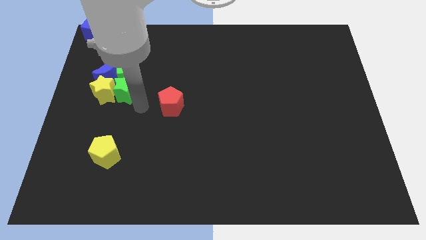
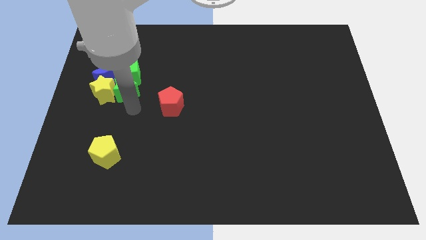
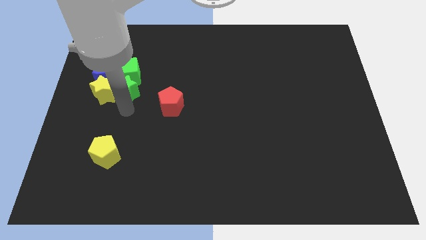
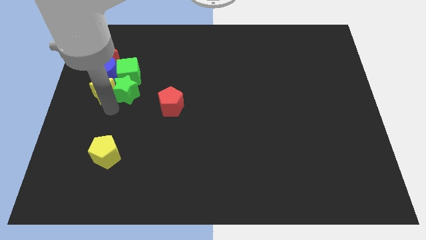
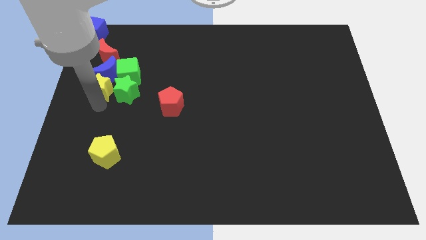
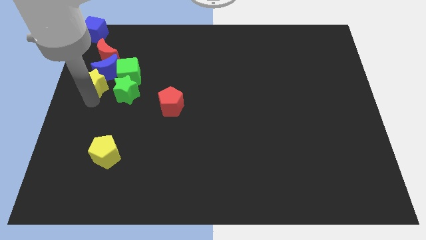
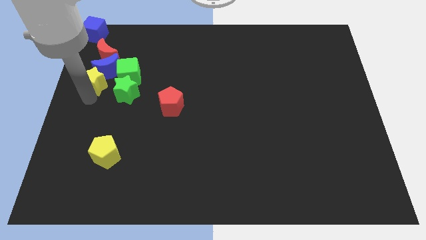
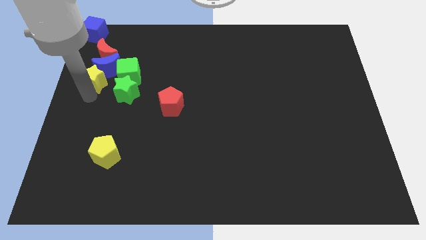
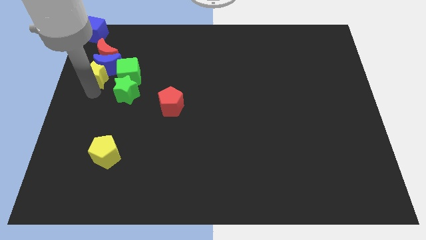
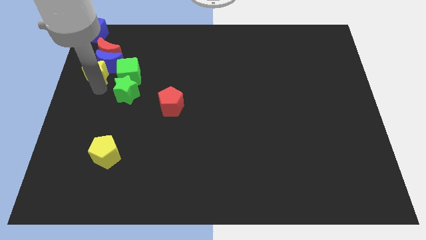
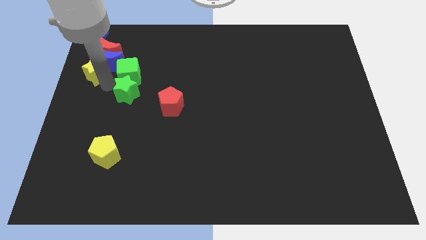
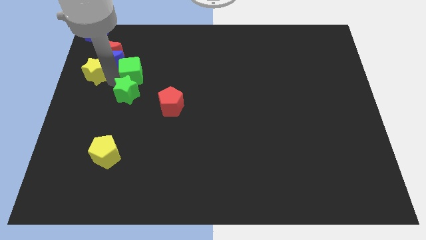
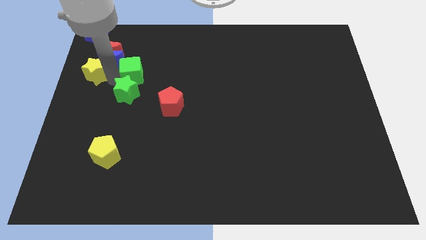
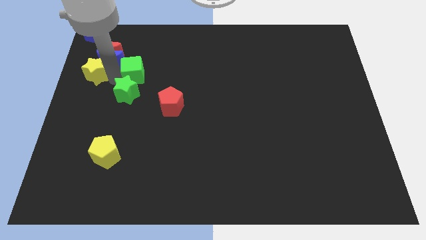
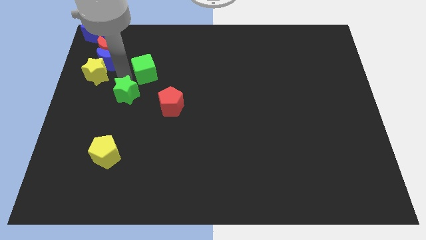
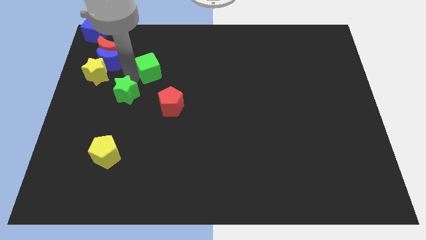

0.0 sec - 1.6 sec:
push yellow star into the blue moon

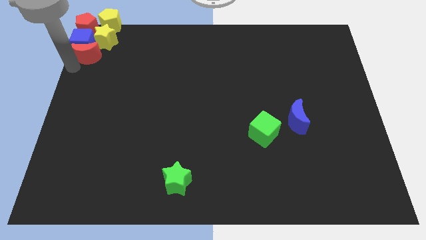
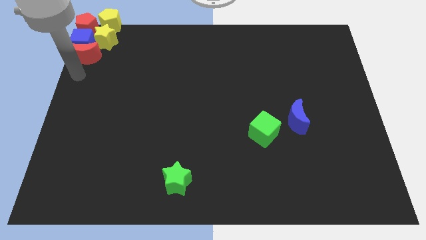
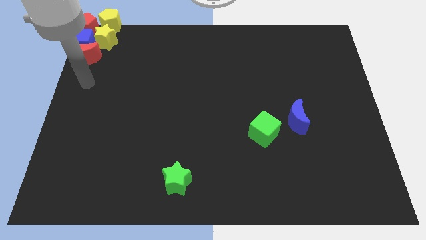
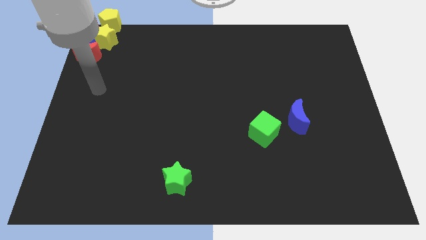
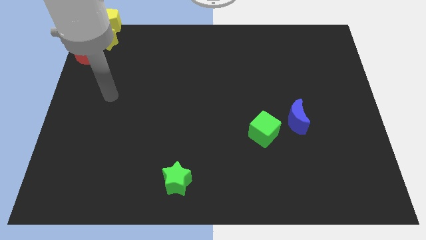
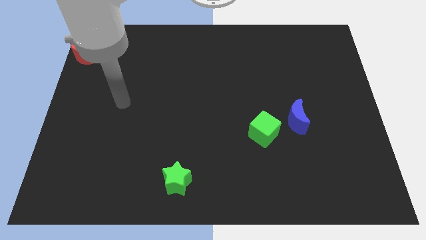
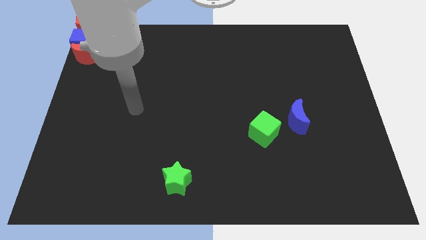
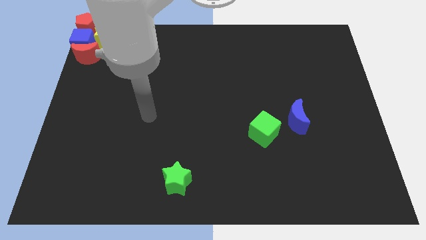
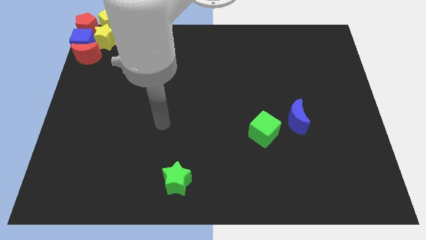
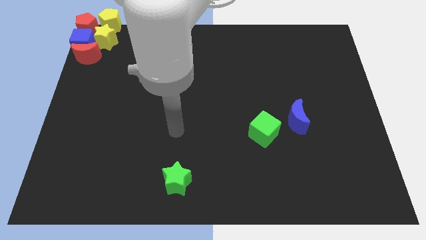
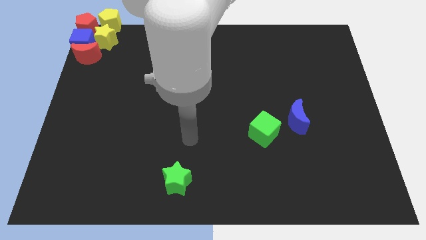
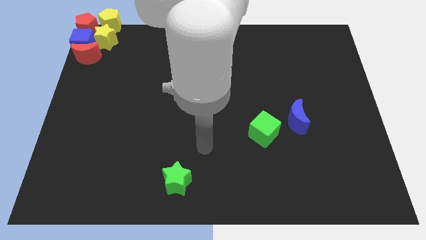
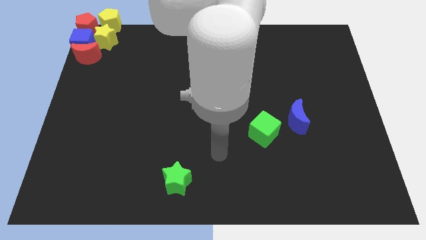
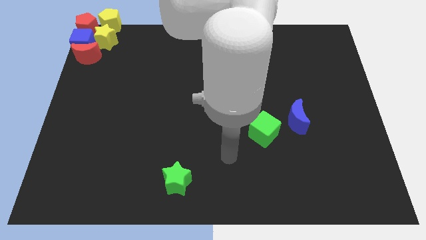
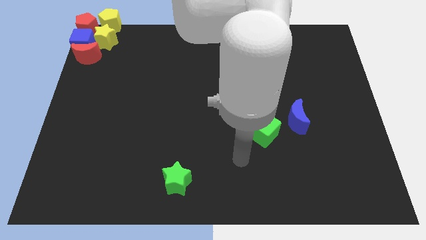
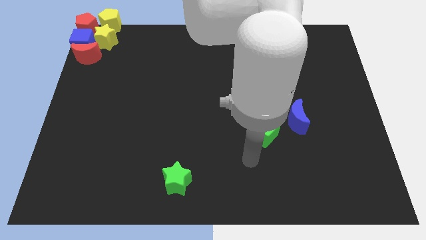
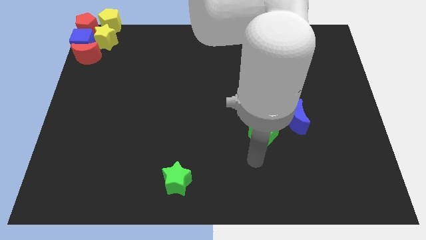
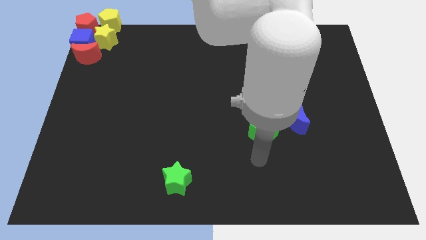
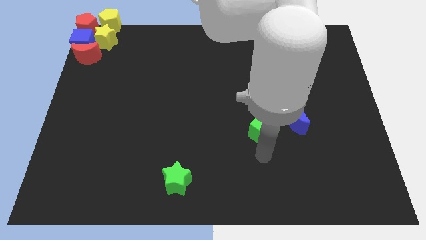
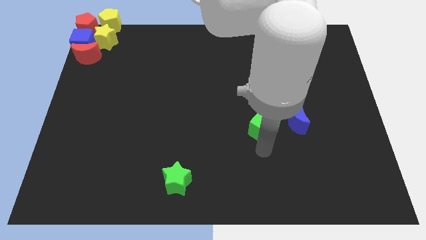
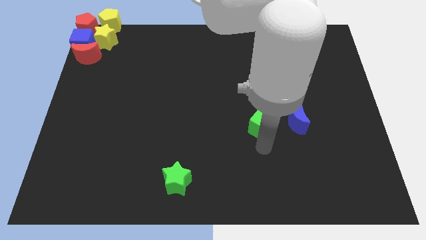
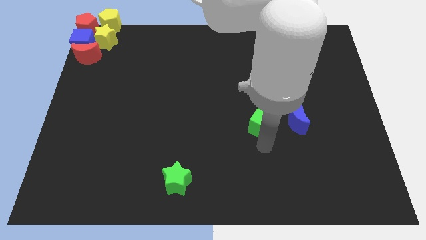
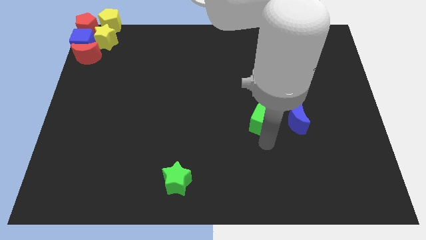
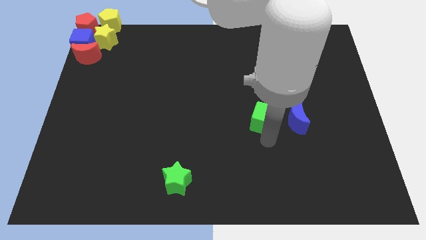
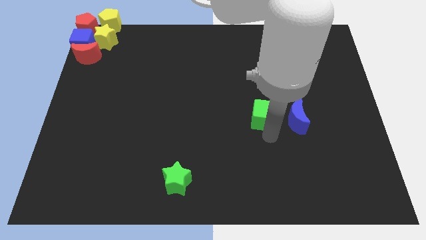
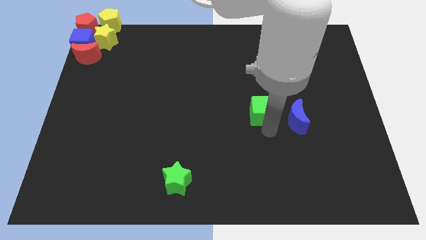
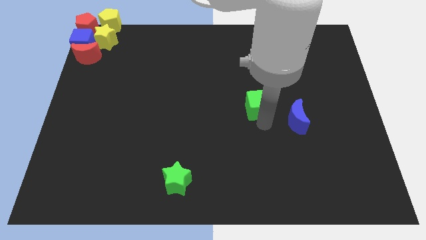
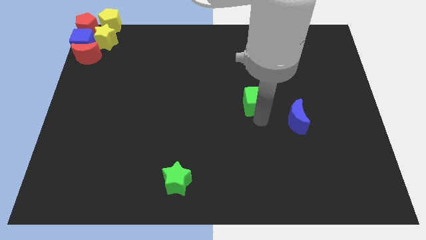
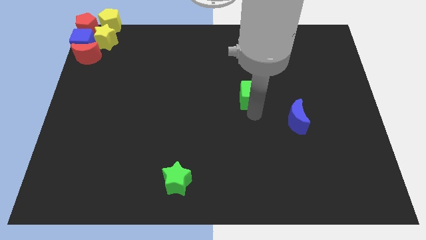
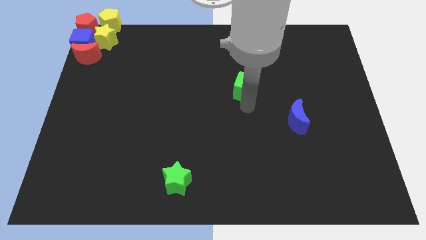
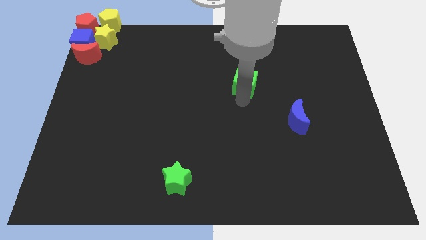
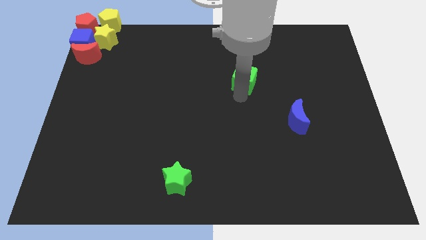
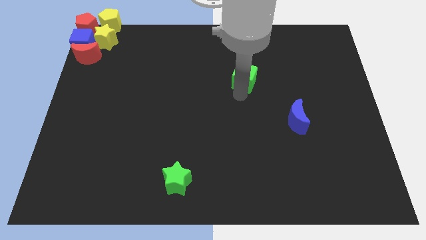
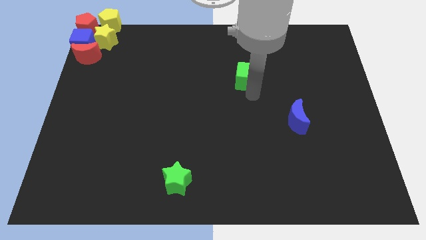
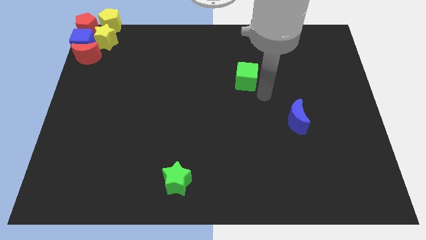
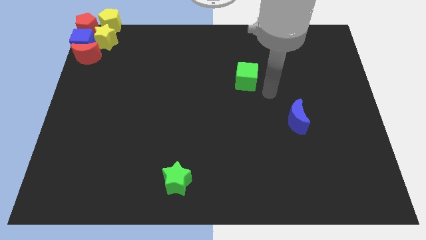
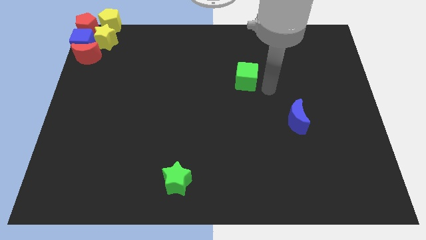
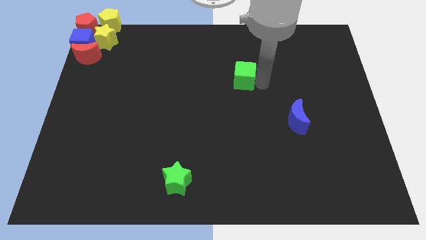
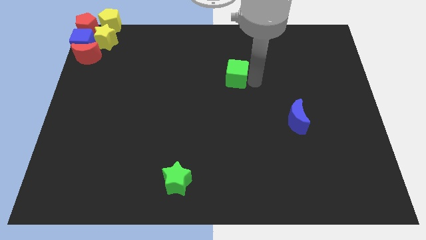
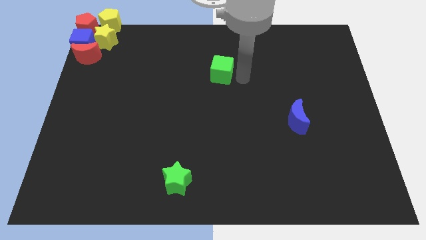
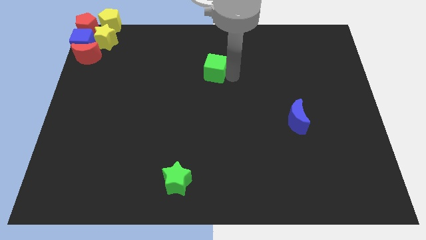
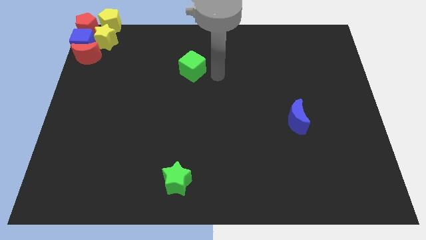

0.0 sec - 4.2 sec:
slide the green cube diagonally top left to the blue moon

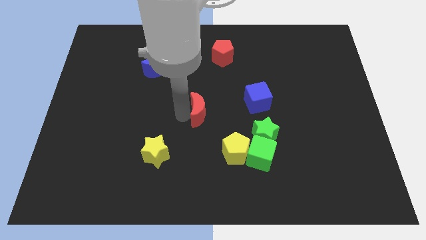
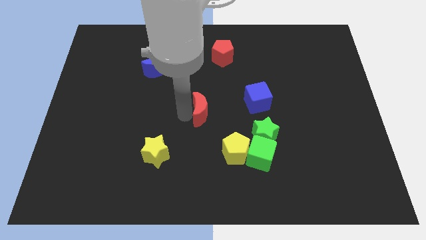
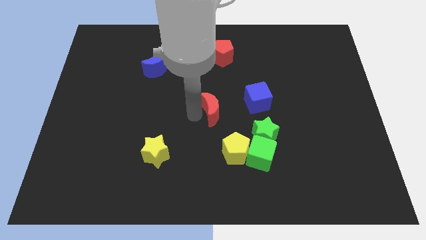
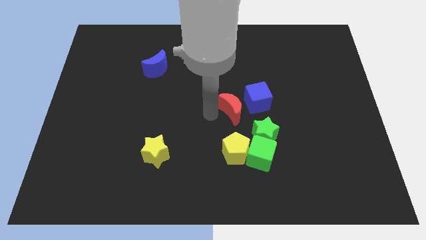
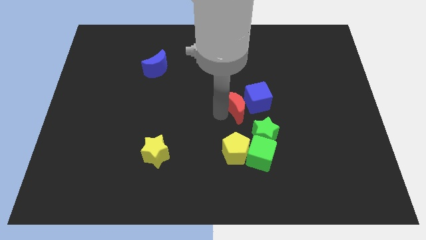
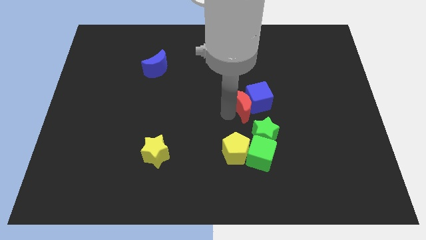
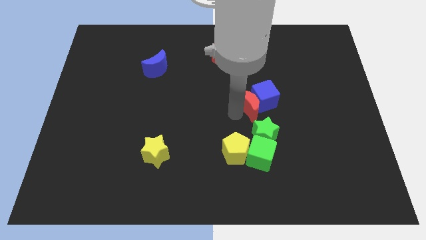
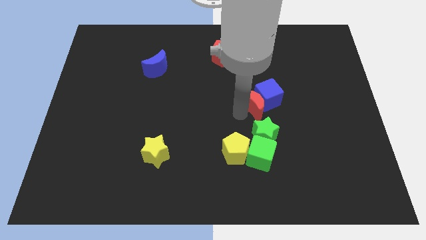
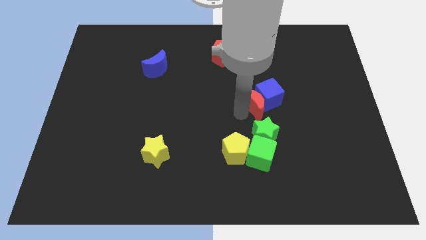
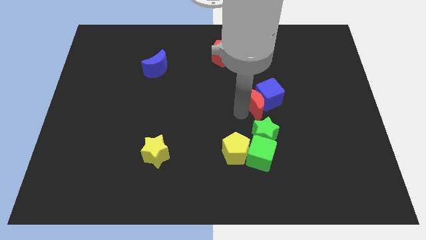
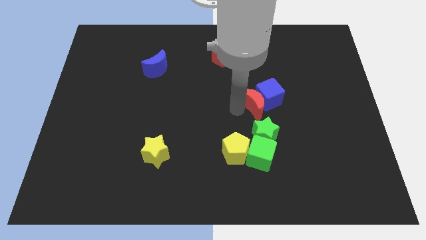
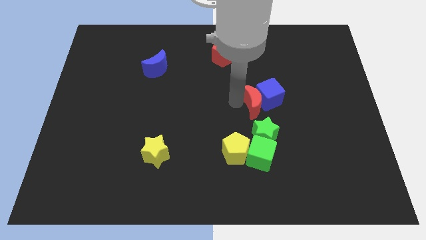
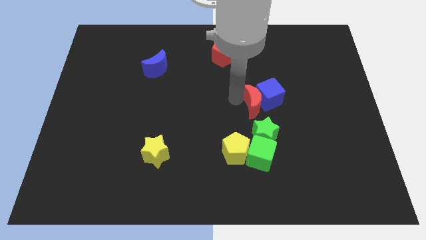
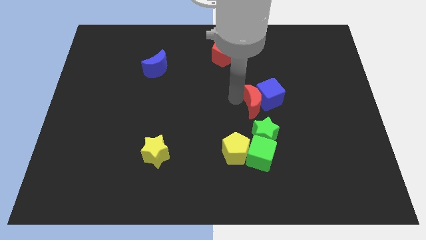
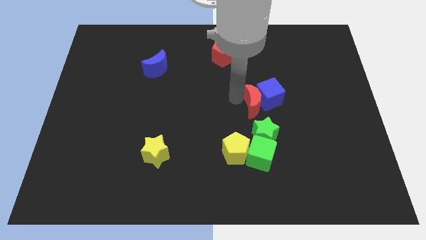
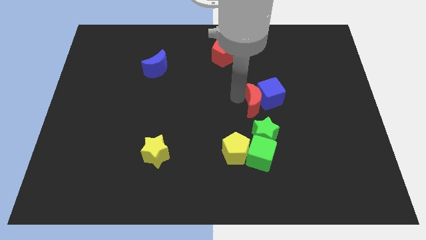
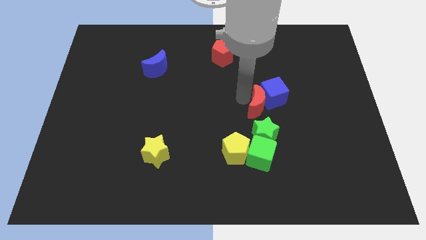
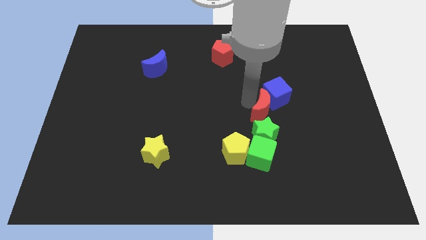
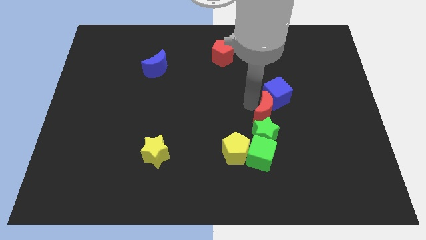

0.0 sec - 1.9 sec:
move the red crescent to the top of the green star

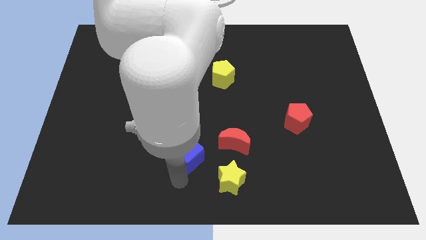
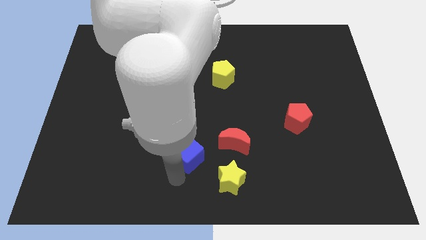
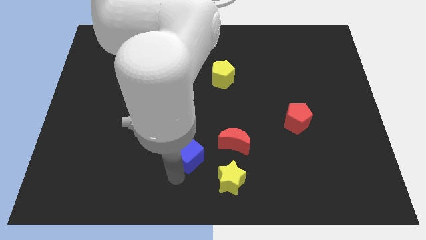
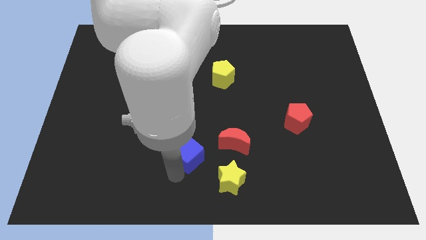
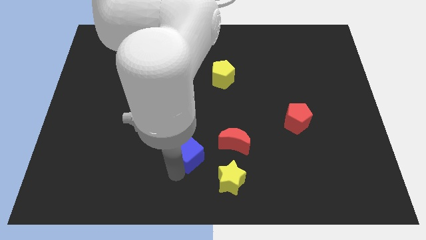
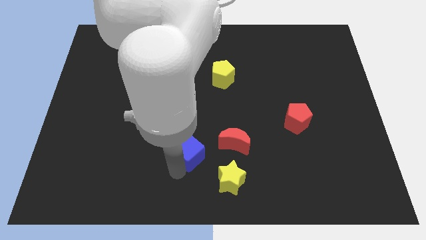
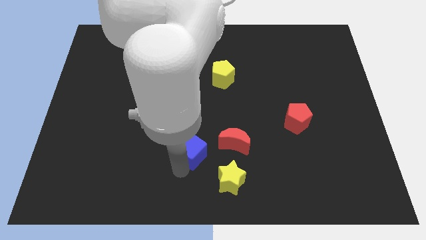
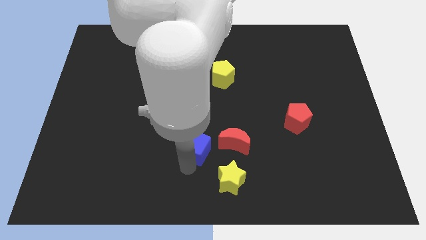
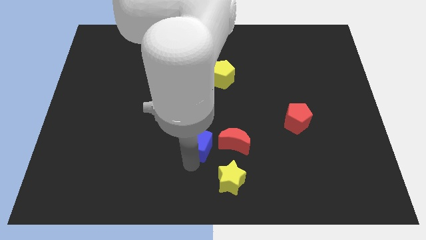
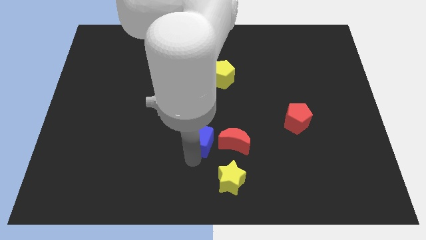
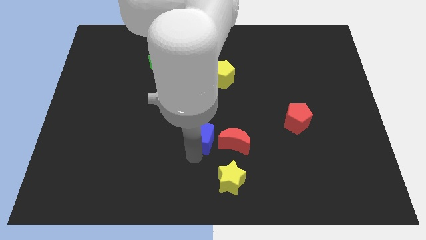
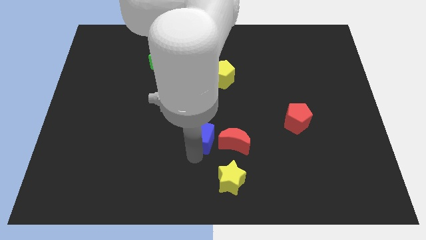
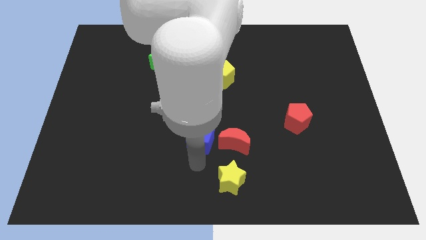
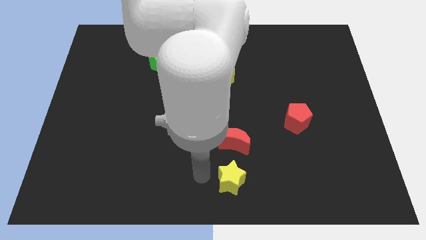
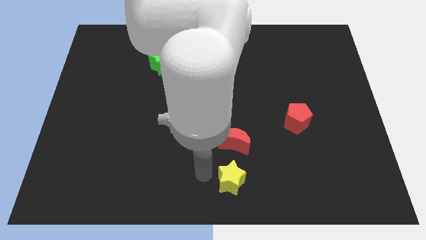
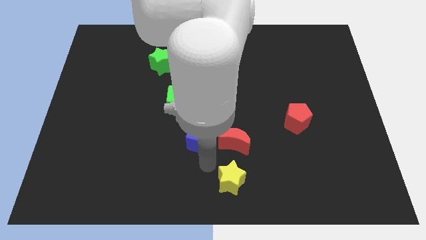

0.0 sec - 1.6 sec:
place the blue cube left to red moon
